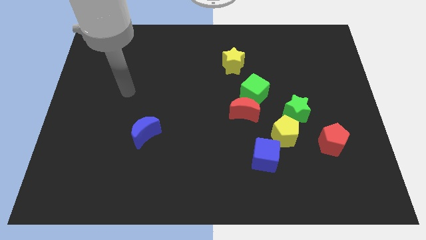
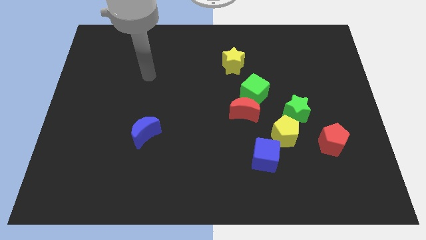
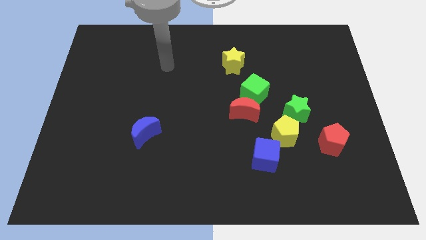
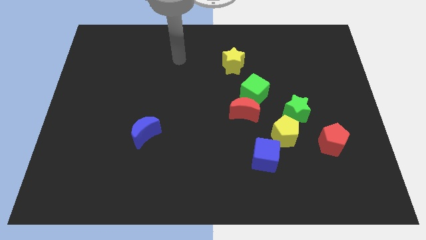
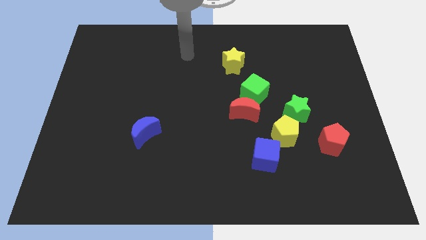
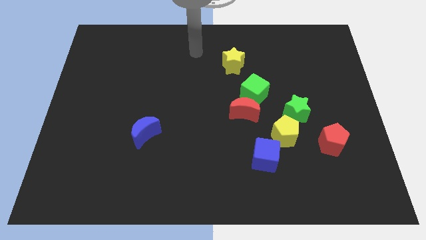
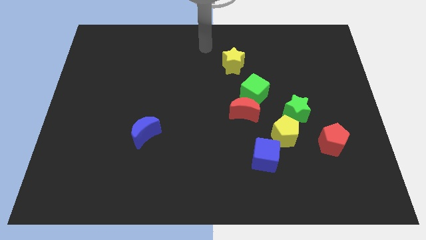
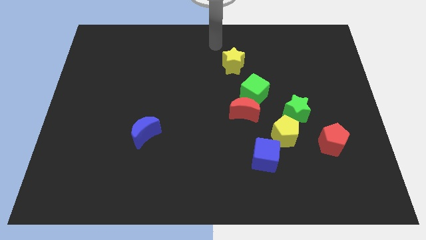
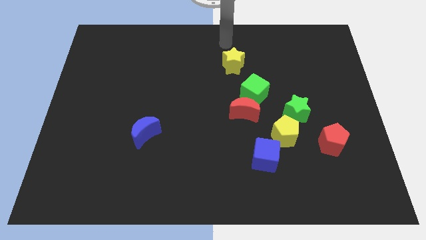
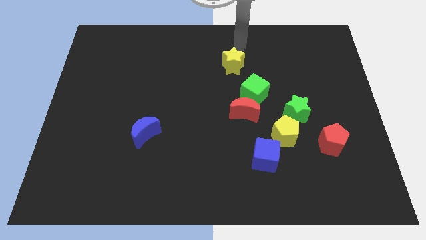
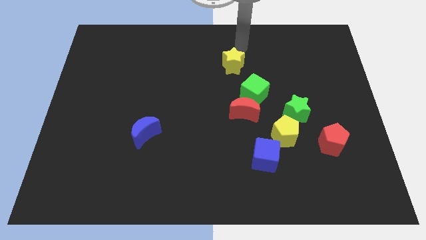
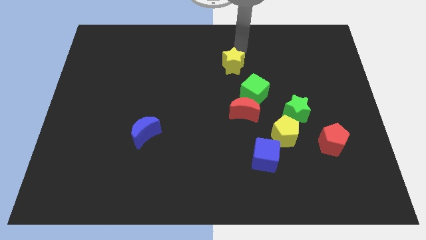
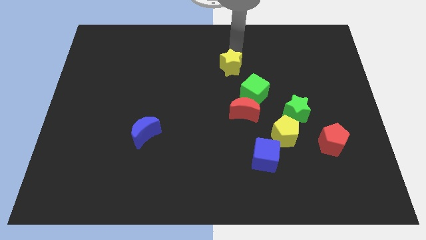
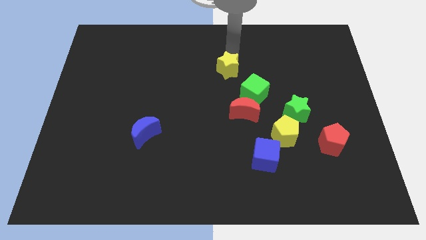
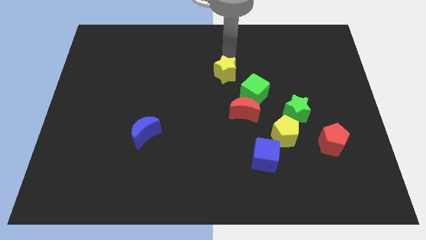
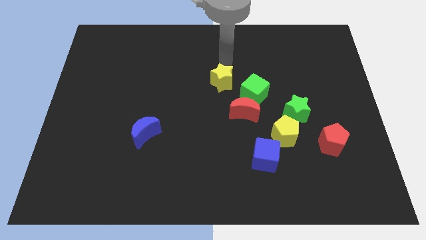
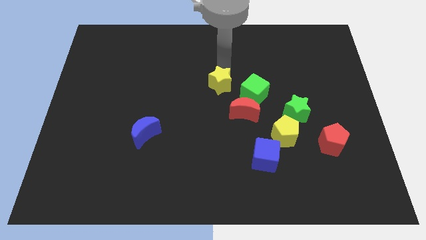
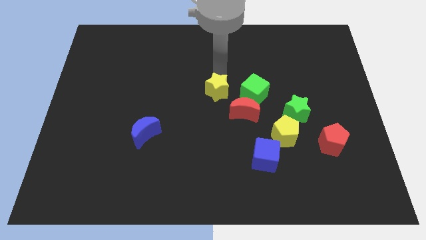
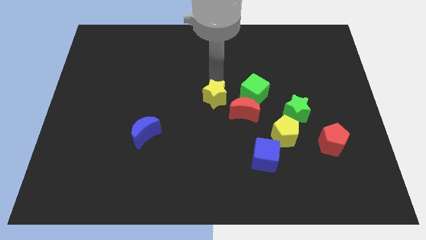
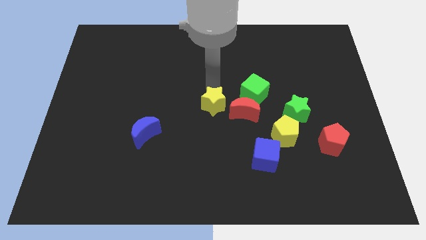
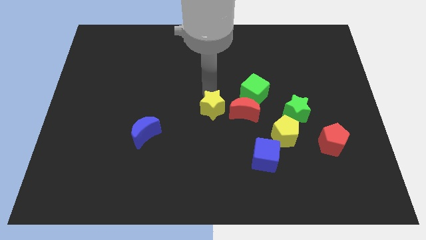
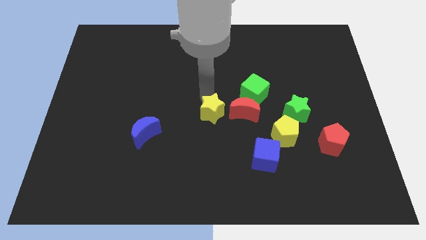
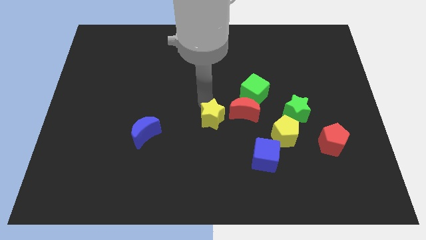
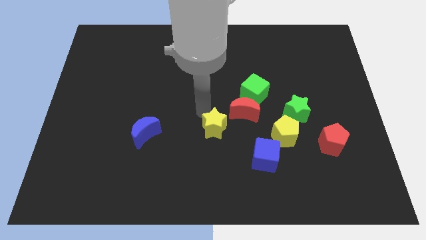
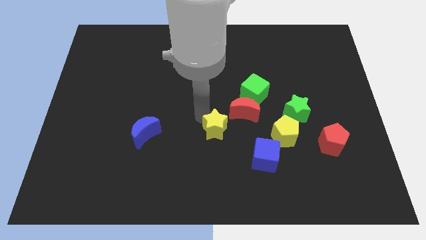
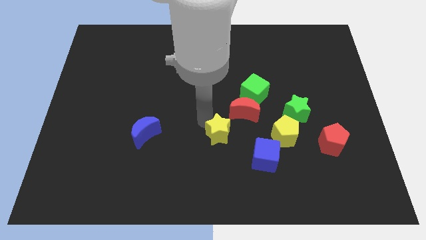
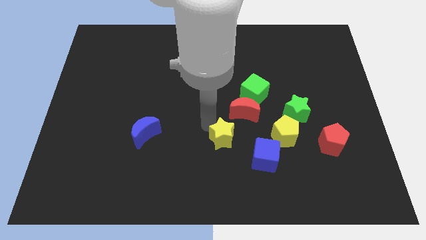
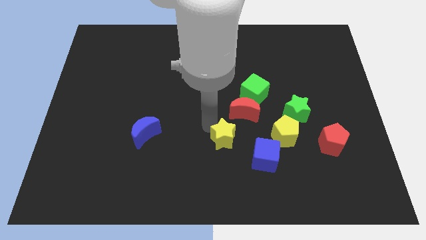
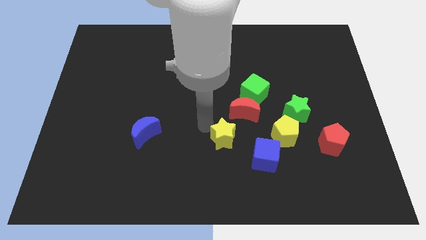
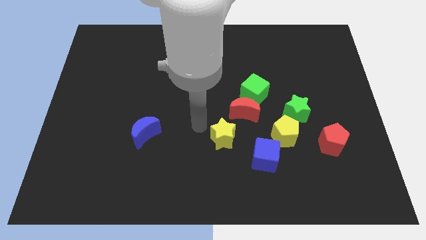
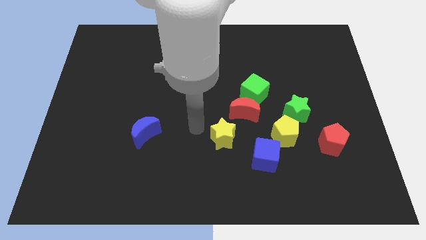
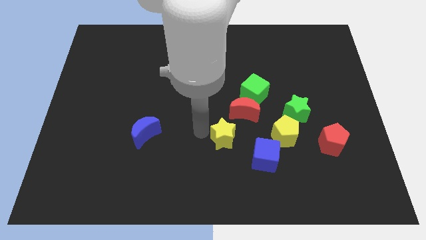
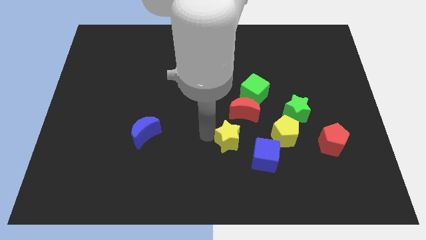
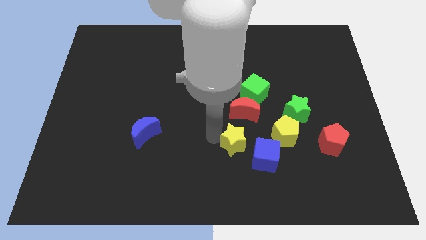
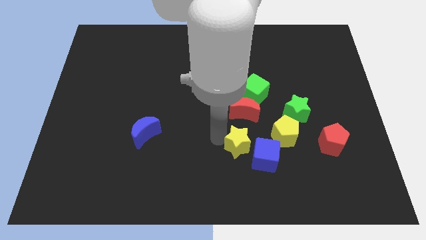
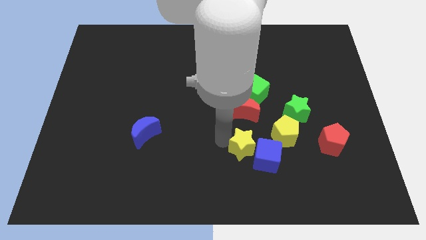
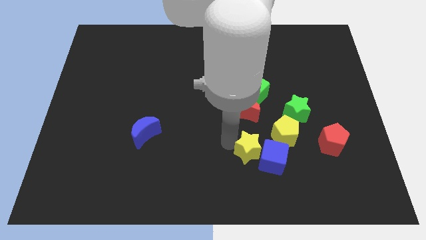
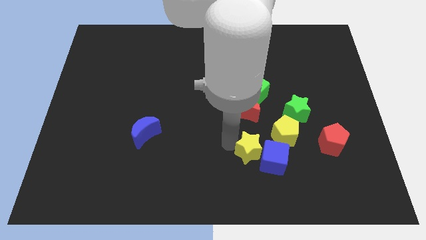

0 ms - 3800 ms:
move the yellow star next to the blue cube

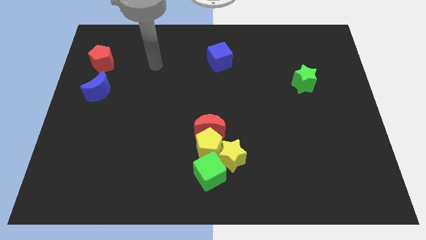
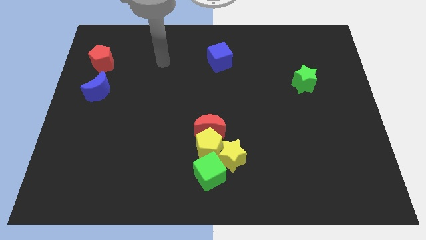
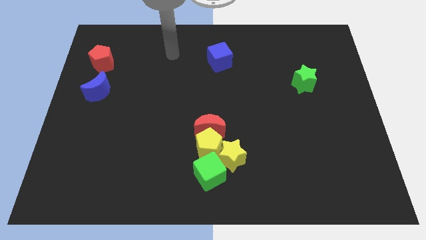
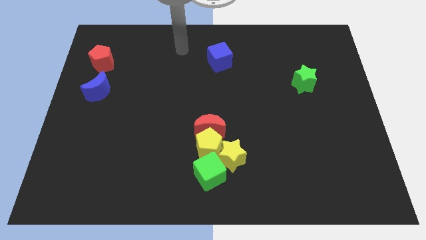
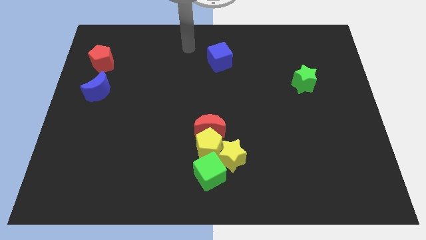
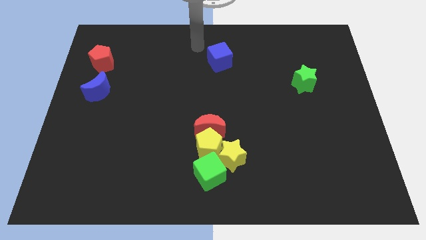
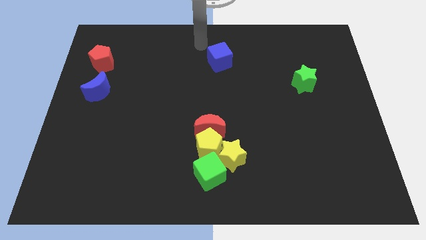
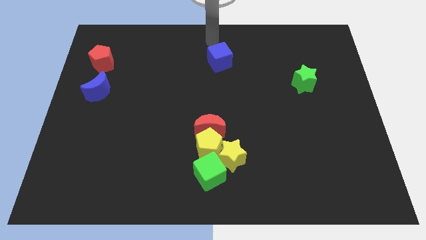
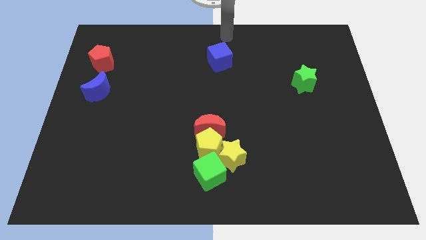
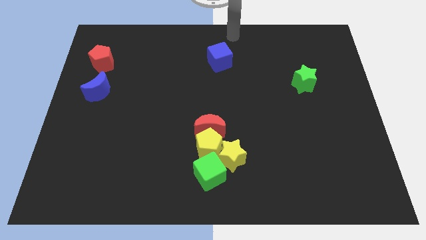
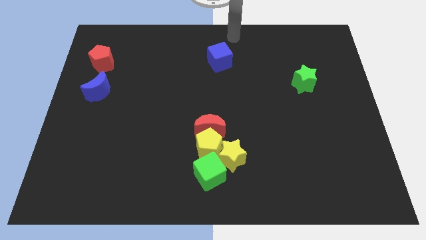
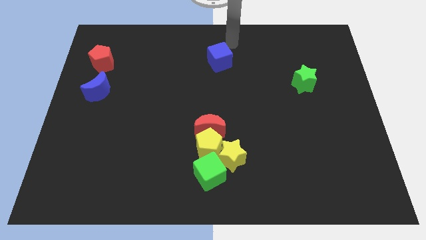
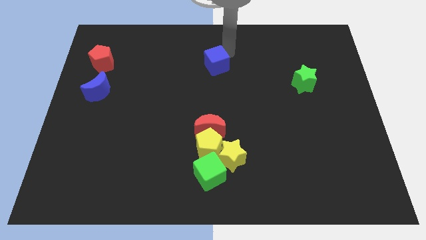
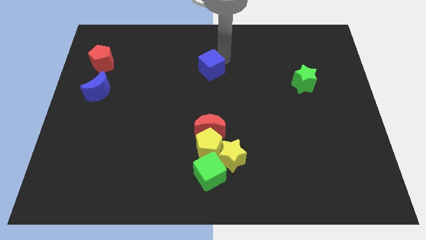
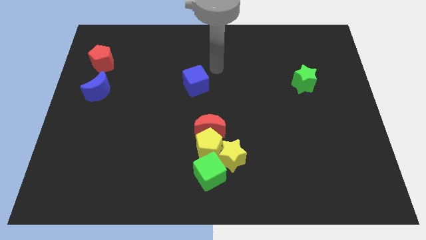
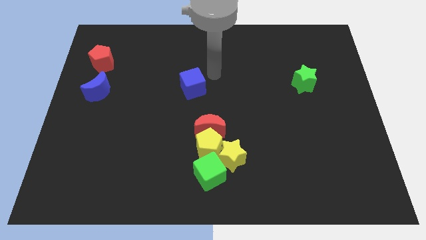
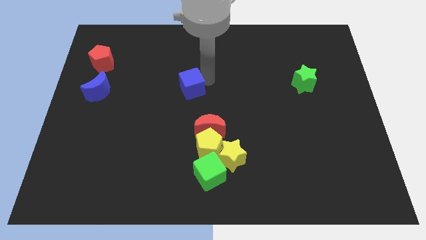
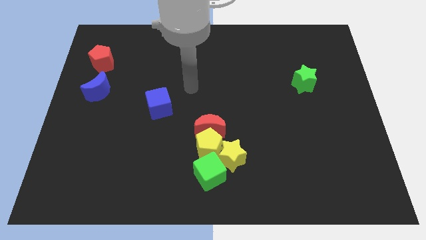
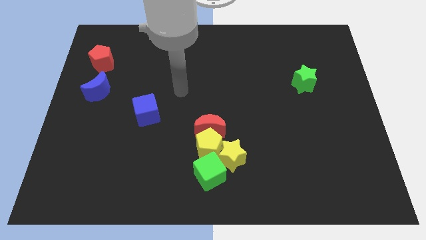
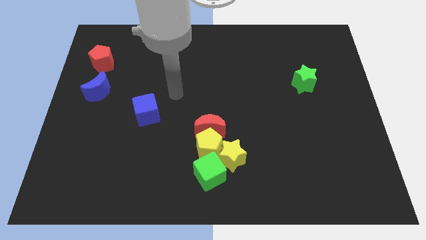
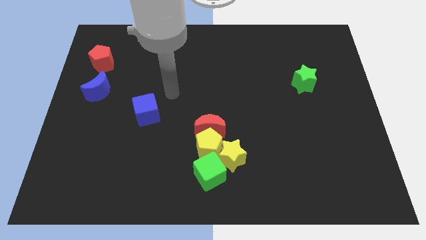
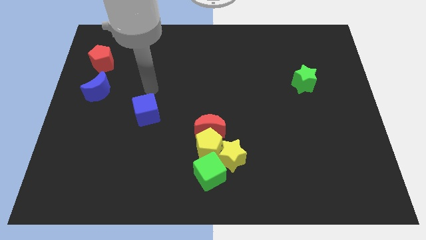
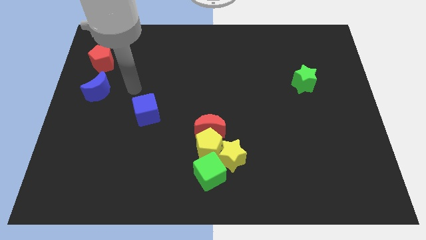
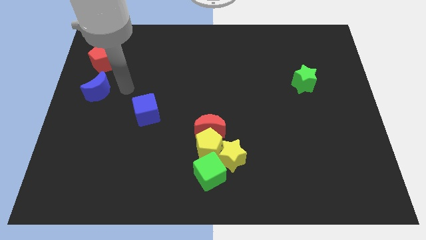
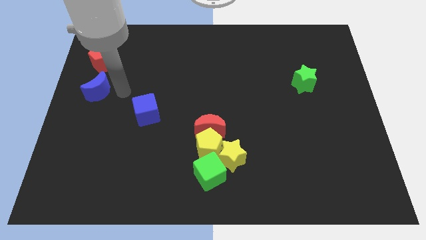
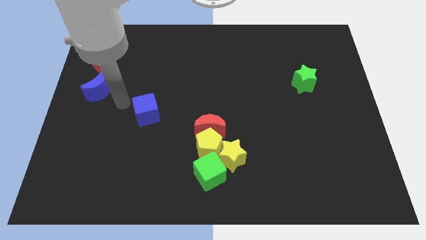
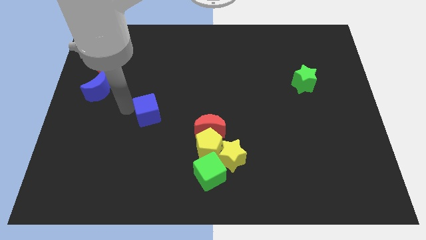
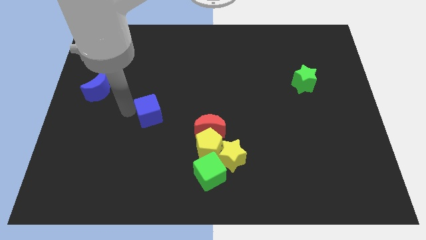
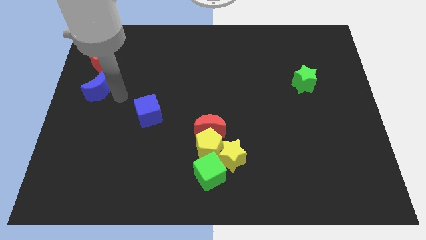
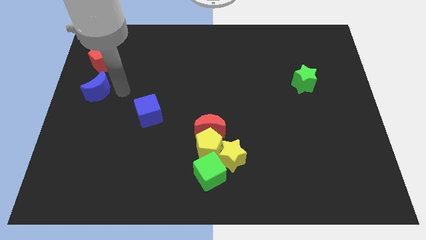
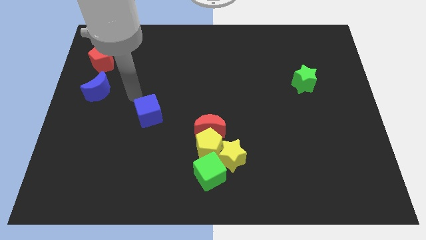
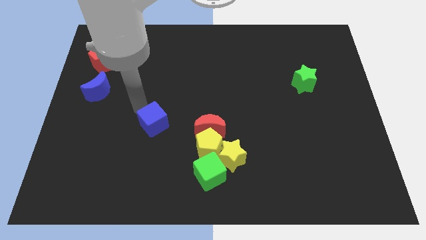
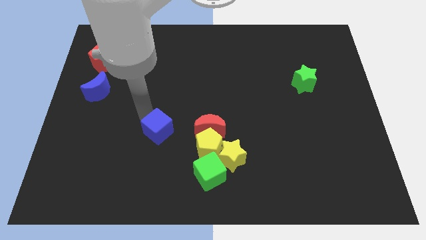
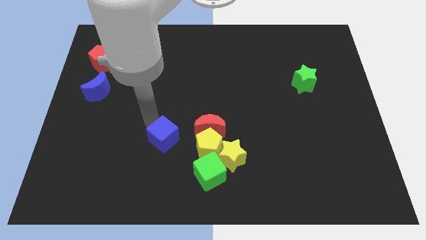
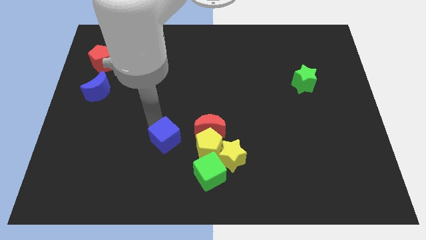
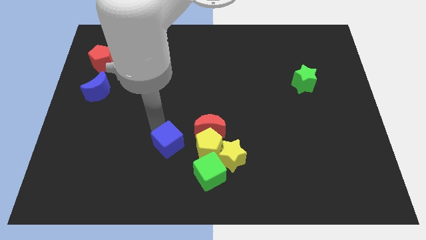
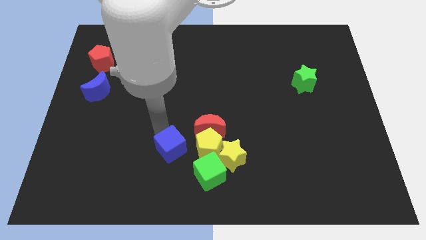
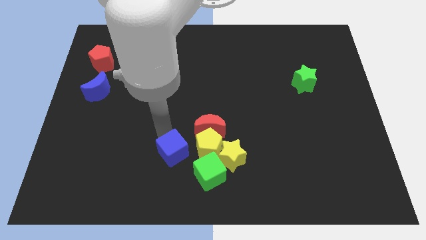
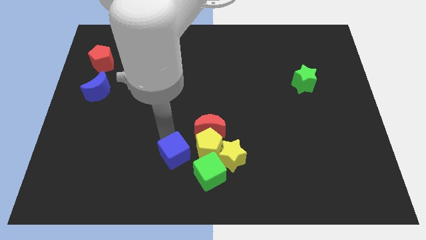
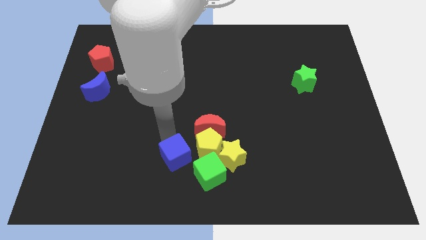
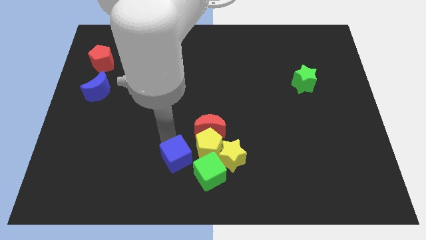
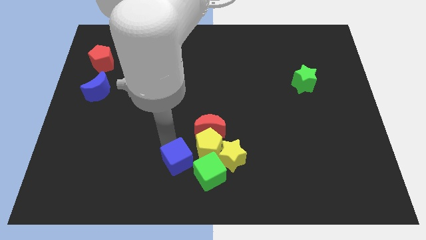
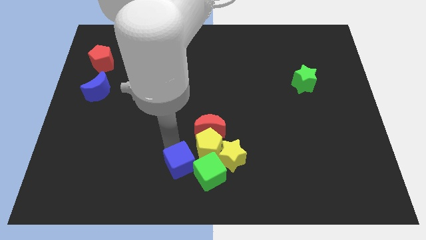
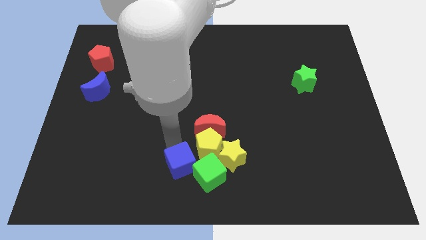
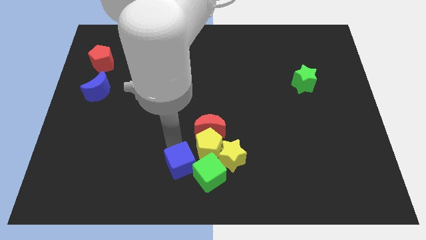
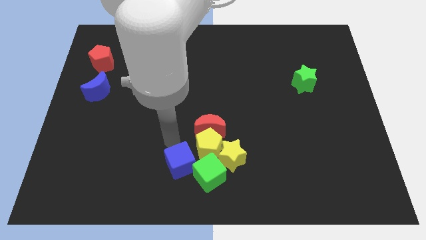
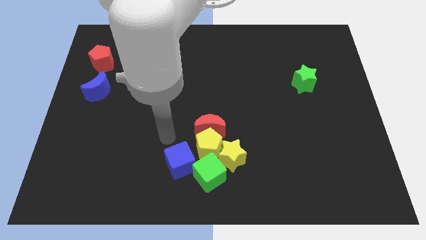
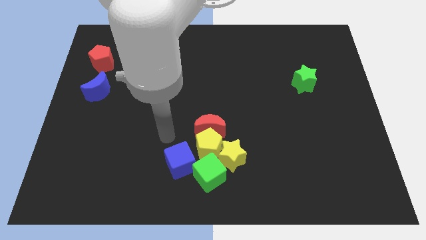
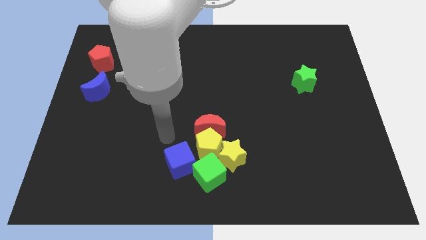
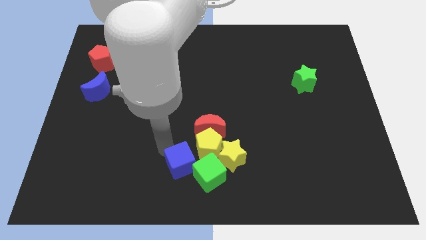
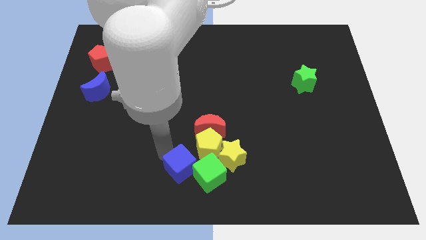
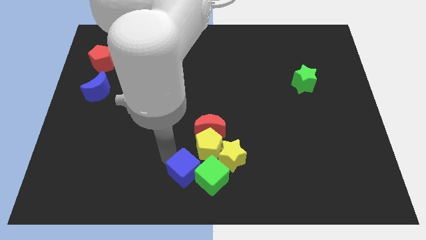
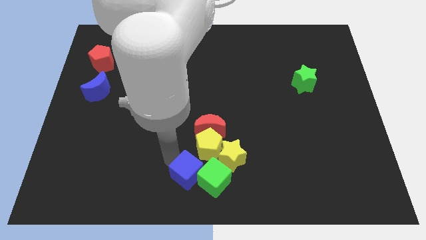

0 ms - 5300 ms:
push the blue cube close to the green cube
